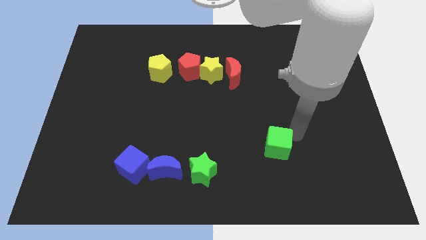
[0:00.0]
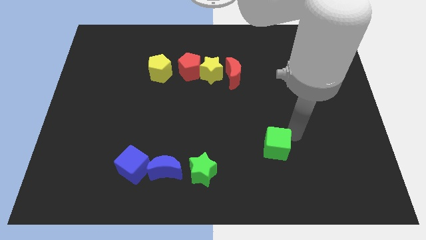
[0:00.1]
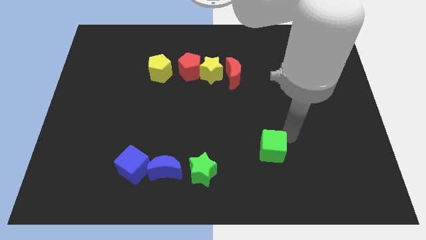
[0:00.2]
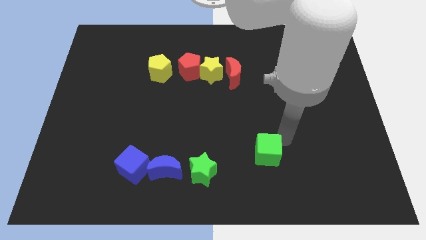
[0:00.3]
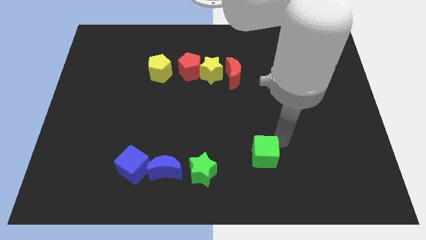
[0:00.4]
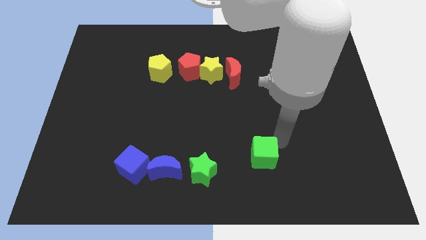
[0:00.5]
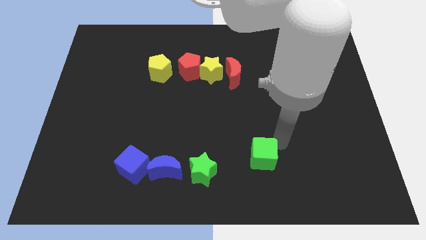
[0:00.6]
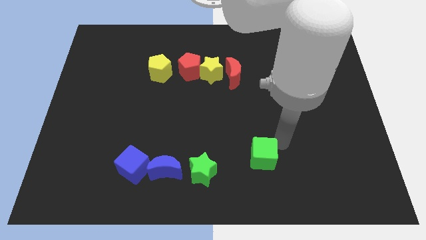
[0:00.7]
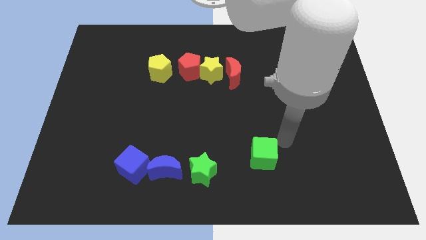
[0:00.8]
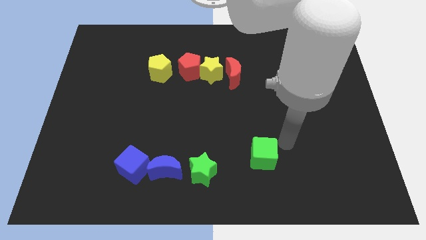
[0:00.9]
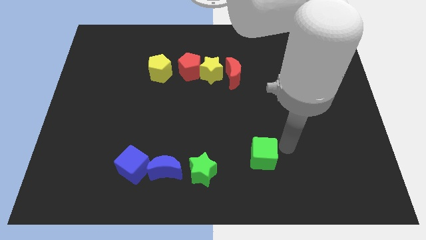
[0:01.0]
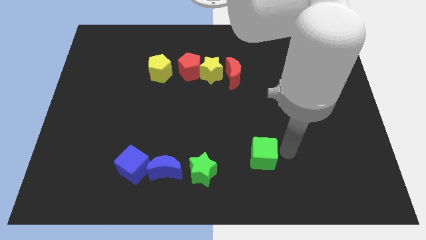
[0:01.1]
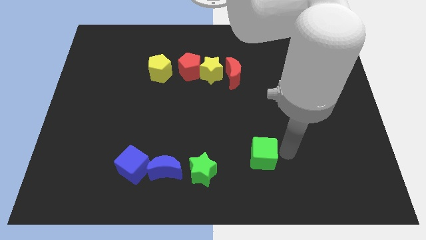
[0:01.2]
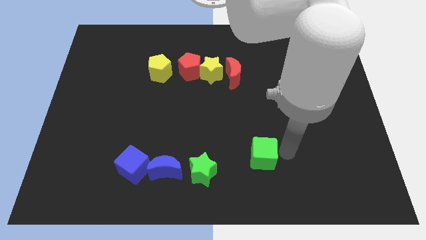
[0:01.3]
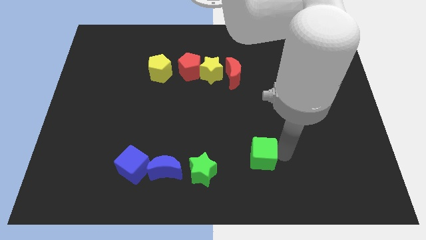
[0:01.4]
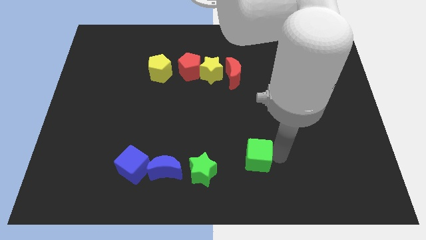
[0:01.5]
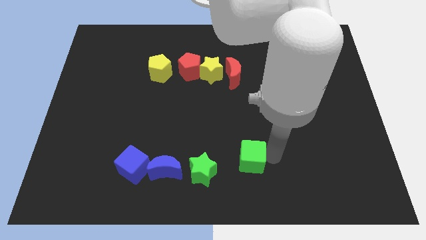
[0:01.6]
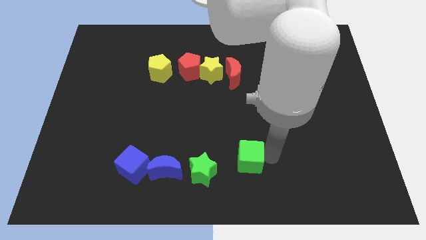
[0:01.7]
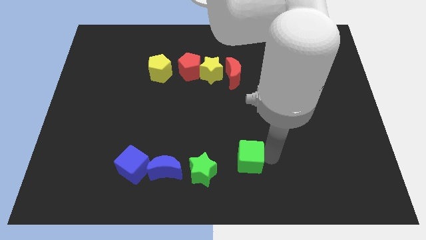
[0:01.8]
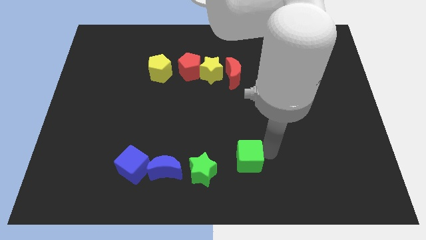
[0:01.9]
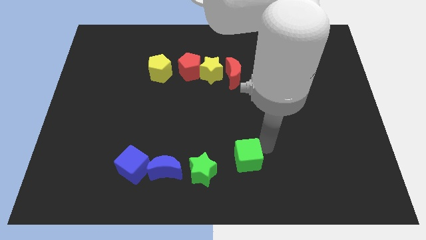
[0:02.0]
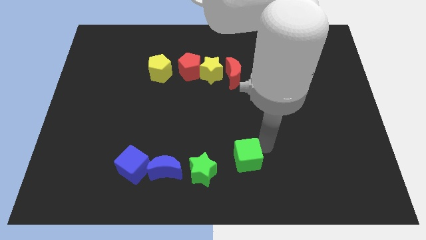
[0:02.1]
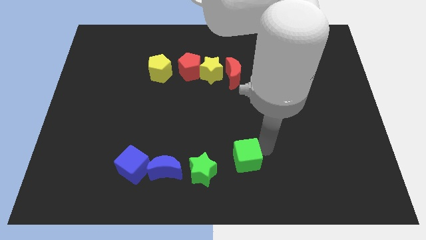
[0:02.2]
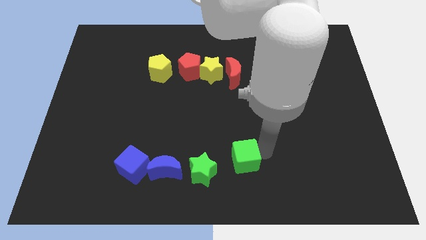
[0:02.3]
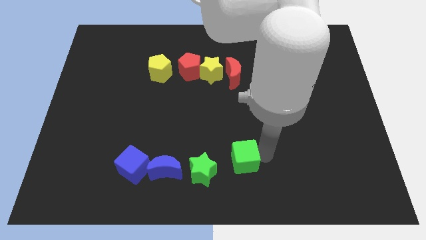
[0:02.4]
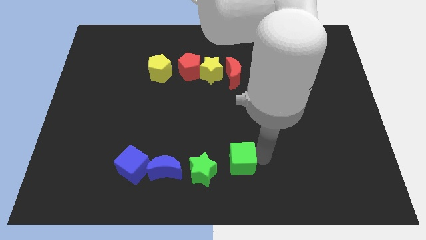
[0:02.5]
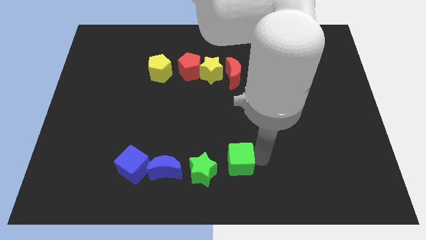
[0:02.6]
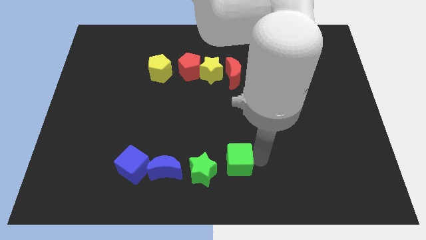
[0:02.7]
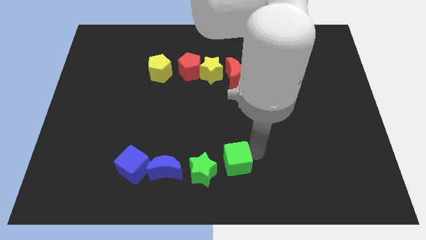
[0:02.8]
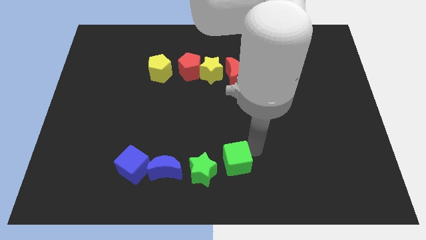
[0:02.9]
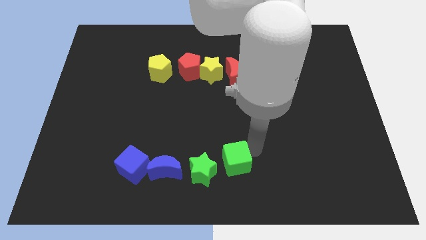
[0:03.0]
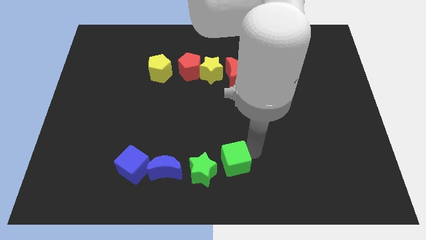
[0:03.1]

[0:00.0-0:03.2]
push the green cube to the right side of the green star

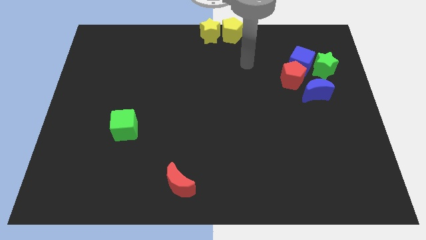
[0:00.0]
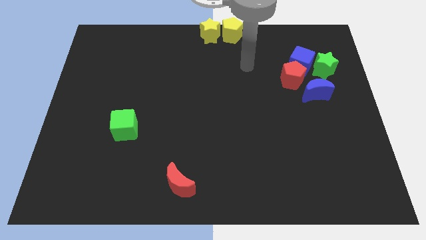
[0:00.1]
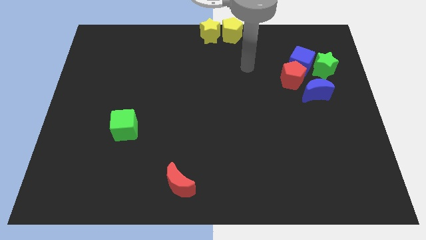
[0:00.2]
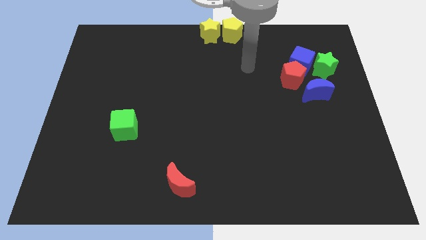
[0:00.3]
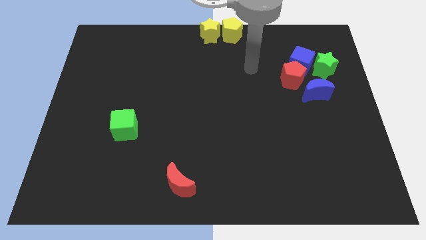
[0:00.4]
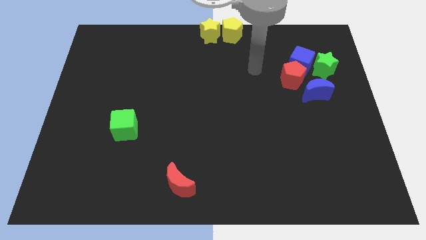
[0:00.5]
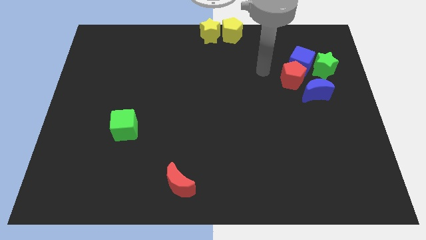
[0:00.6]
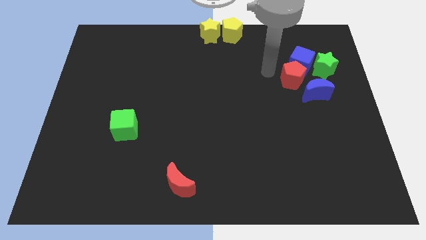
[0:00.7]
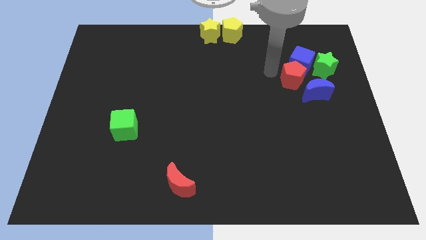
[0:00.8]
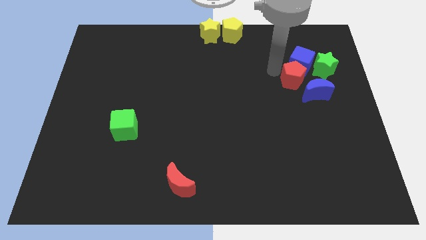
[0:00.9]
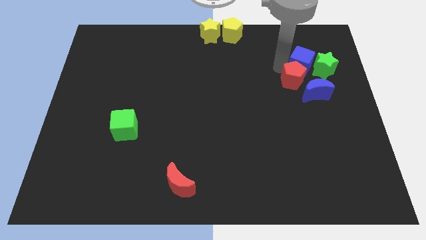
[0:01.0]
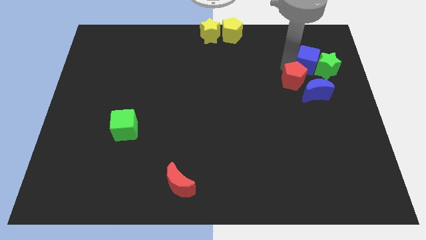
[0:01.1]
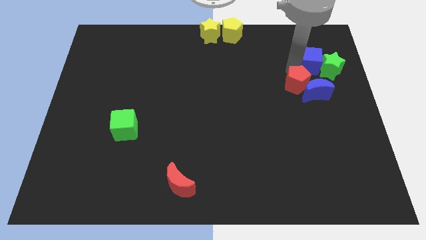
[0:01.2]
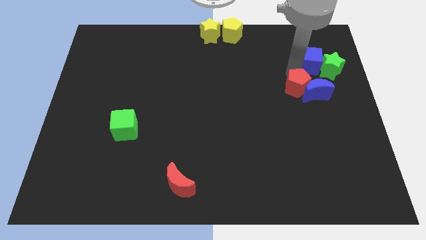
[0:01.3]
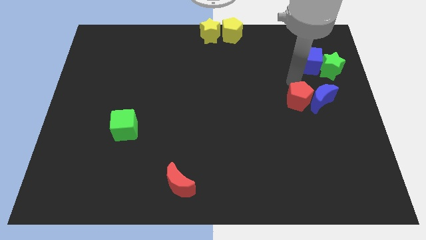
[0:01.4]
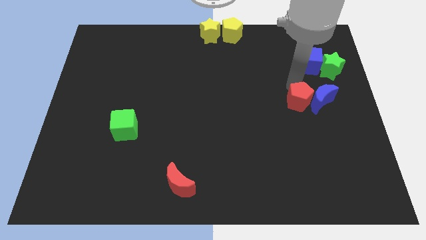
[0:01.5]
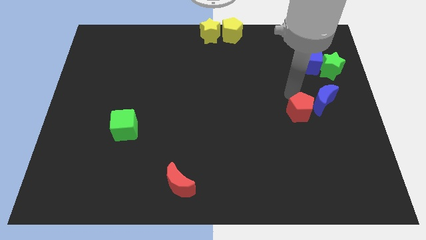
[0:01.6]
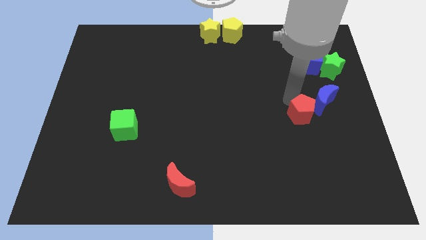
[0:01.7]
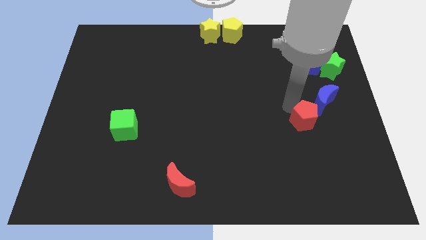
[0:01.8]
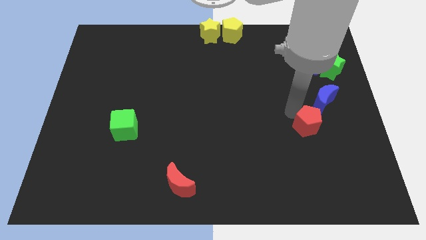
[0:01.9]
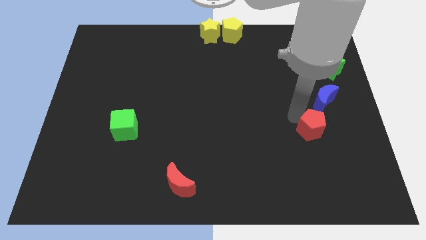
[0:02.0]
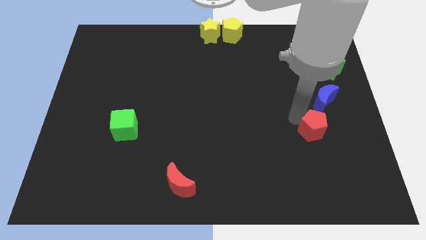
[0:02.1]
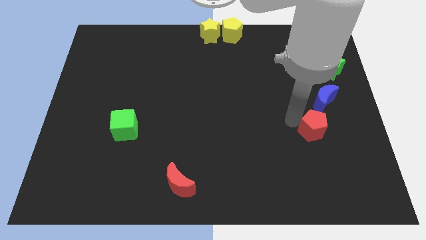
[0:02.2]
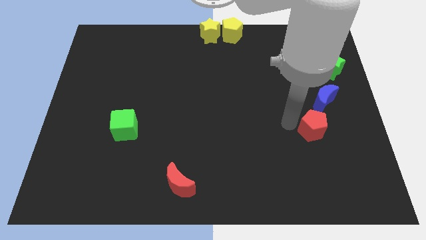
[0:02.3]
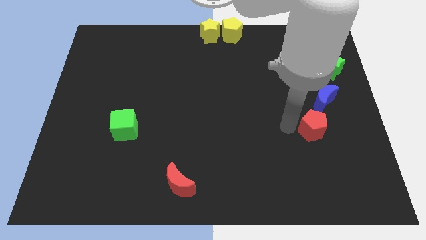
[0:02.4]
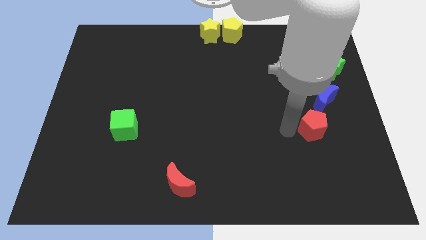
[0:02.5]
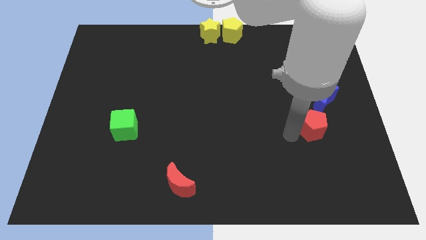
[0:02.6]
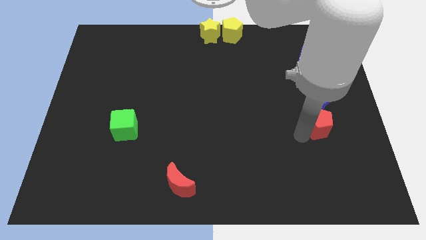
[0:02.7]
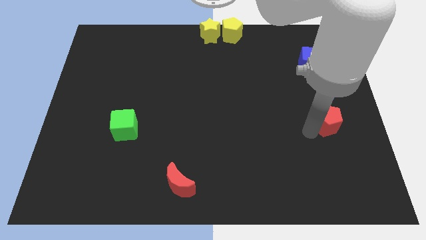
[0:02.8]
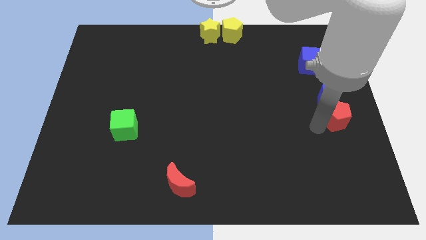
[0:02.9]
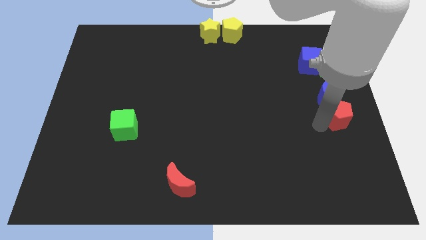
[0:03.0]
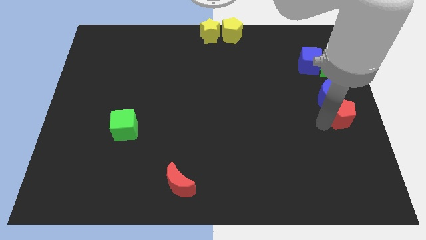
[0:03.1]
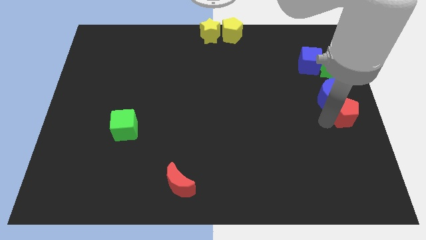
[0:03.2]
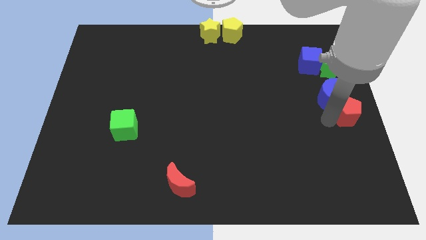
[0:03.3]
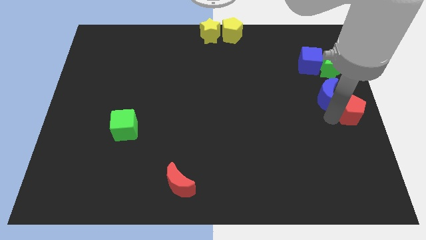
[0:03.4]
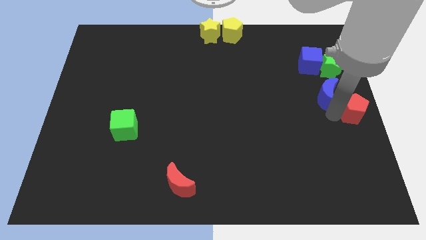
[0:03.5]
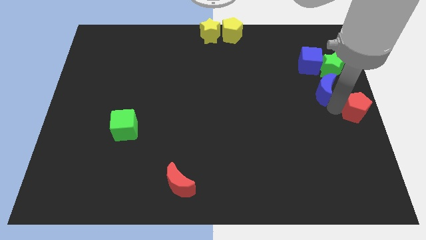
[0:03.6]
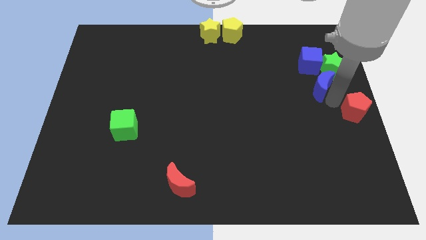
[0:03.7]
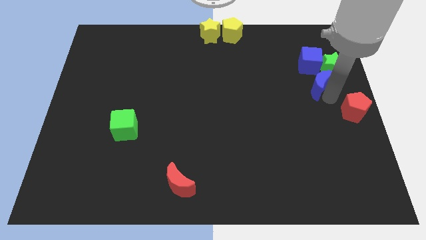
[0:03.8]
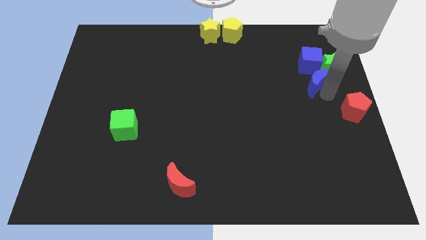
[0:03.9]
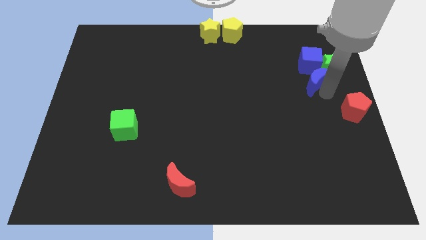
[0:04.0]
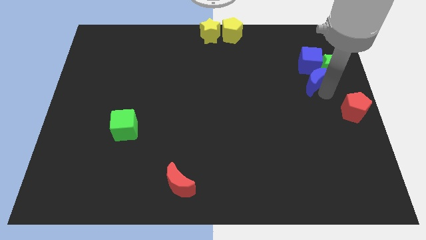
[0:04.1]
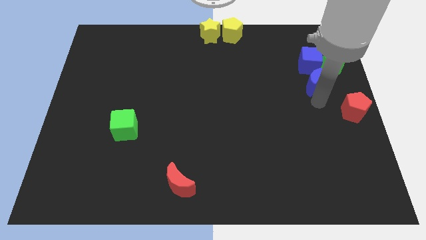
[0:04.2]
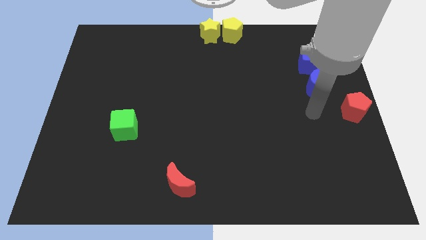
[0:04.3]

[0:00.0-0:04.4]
push the red pentagon to the center right of the board

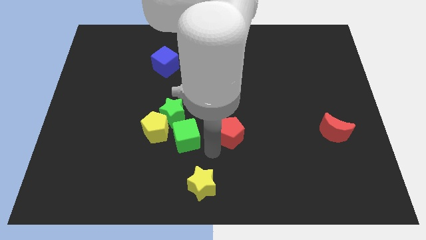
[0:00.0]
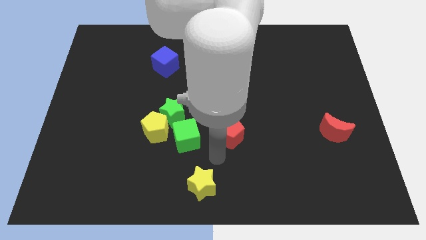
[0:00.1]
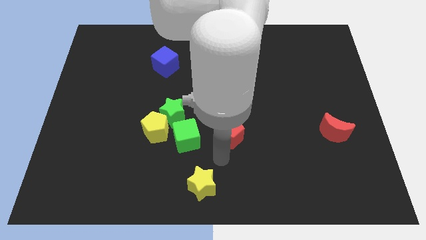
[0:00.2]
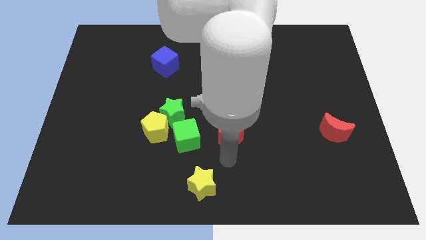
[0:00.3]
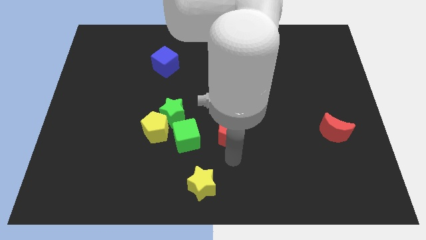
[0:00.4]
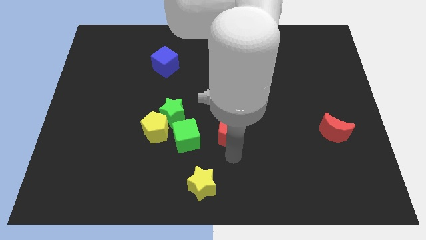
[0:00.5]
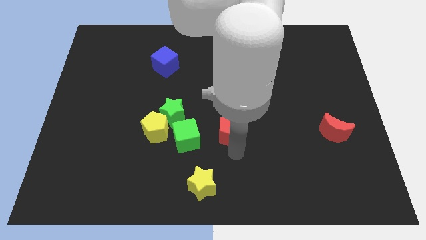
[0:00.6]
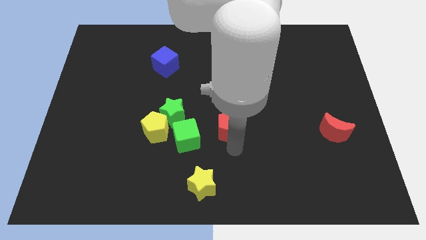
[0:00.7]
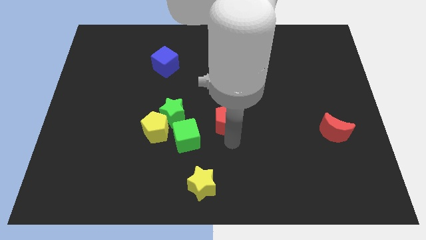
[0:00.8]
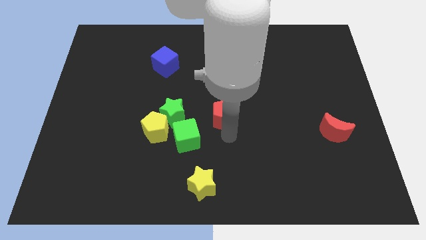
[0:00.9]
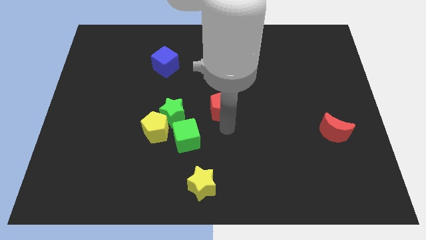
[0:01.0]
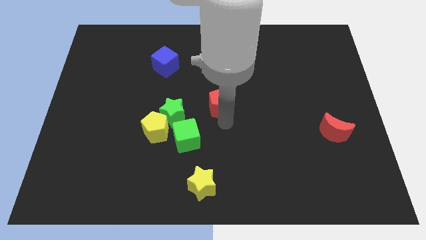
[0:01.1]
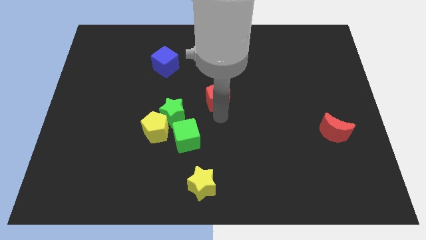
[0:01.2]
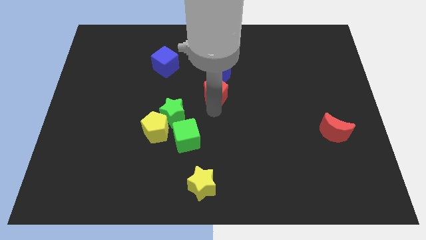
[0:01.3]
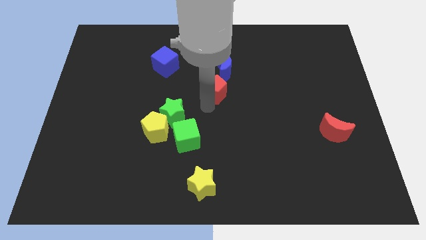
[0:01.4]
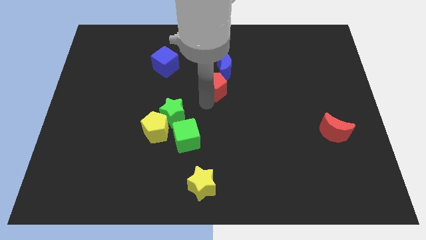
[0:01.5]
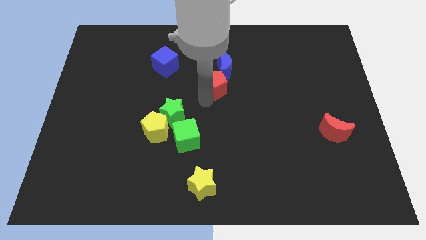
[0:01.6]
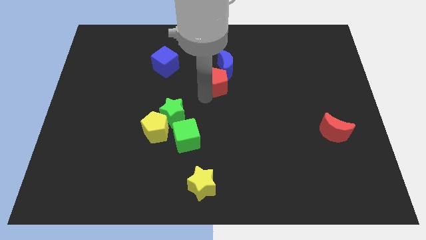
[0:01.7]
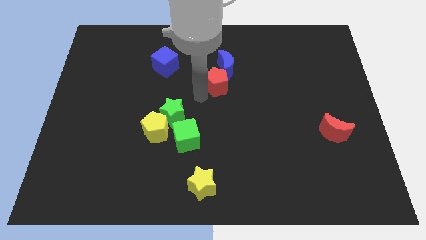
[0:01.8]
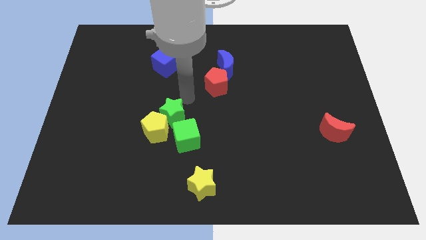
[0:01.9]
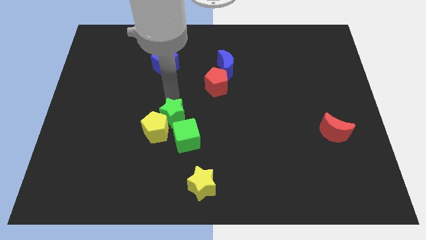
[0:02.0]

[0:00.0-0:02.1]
slide red pentagon into blue moon
